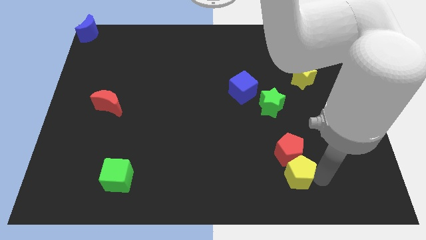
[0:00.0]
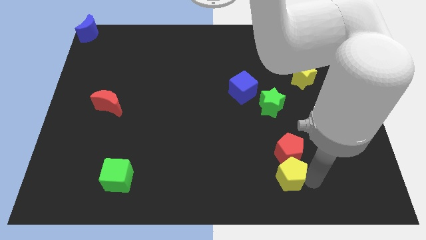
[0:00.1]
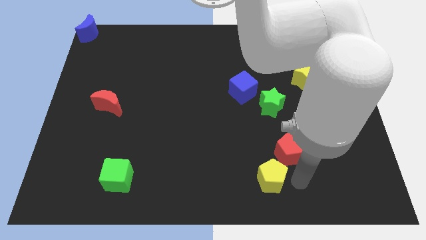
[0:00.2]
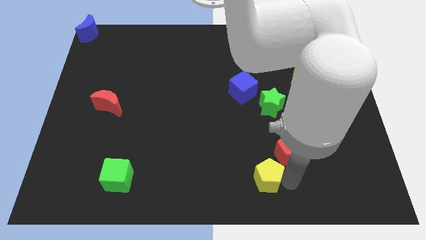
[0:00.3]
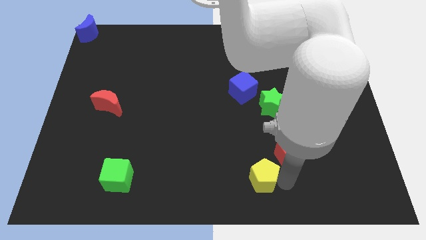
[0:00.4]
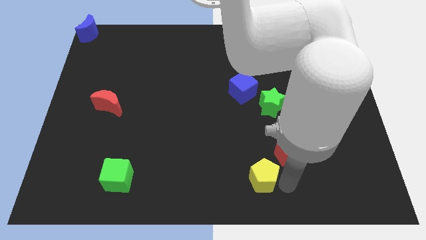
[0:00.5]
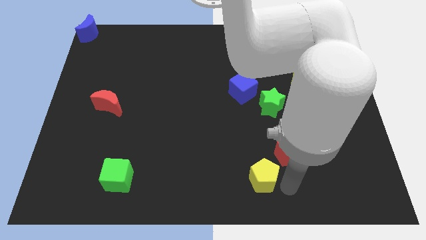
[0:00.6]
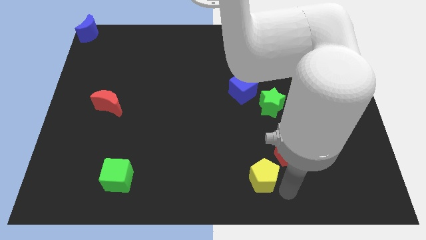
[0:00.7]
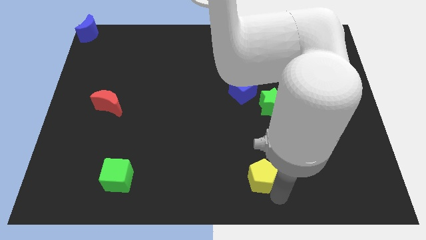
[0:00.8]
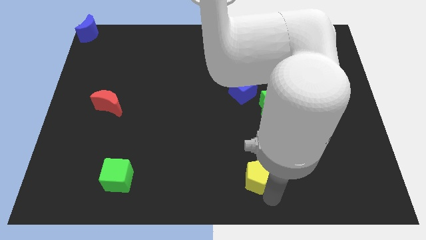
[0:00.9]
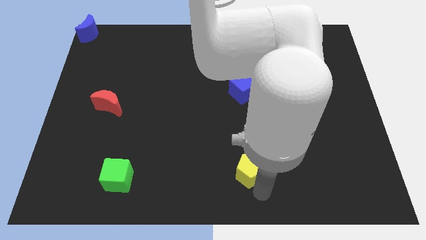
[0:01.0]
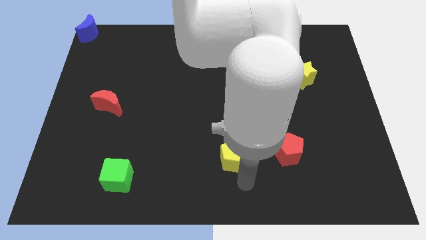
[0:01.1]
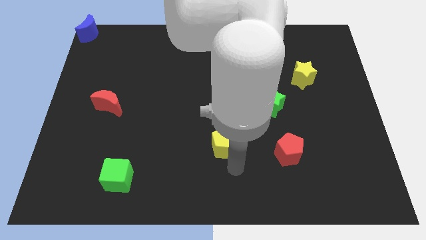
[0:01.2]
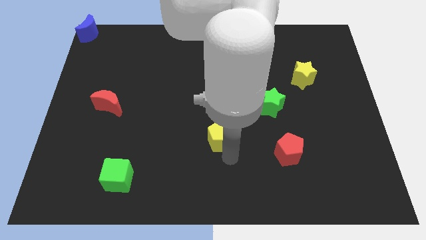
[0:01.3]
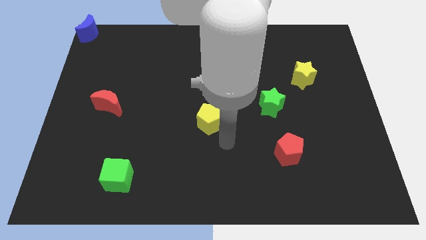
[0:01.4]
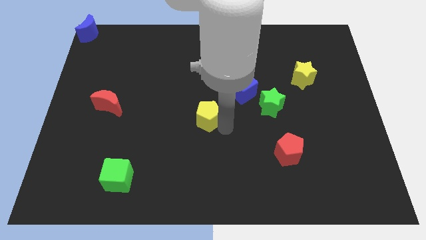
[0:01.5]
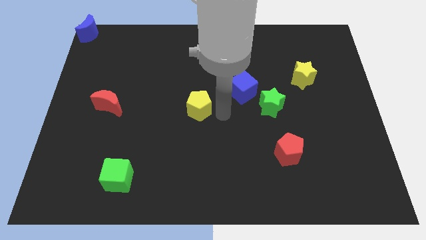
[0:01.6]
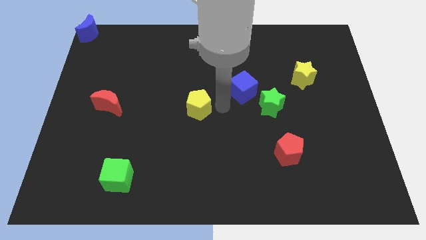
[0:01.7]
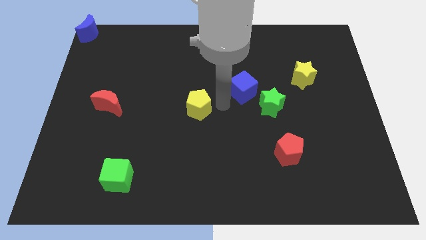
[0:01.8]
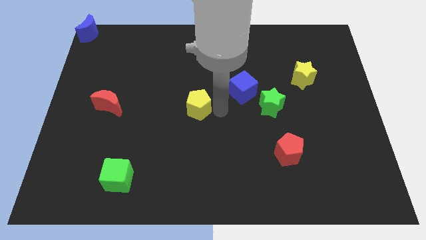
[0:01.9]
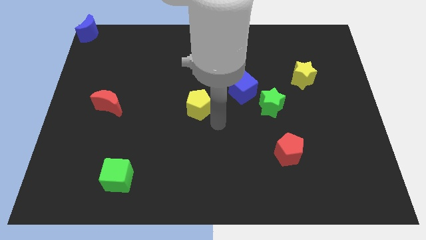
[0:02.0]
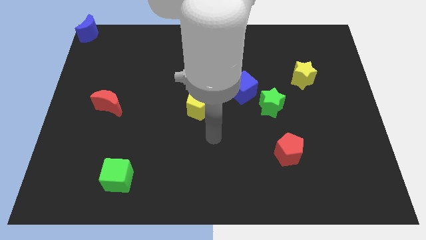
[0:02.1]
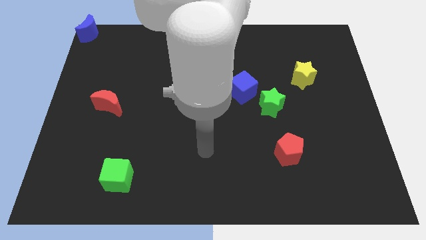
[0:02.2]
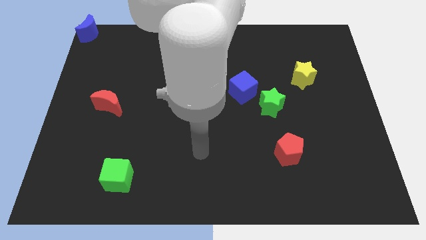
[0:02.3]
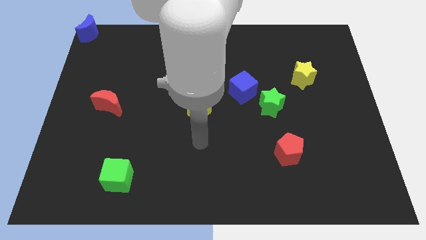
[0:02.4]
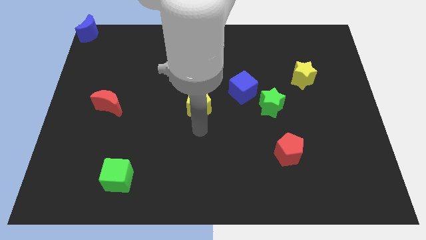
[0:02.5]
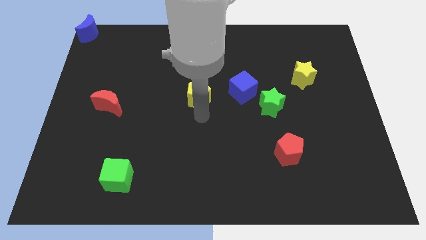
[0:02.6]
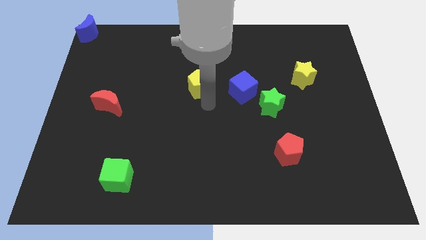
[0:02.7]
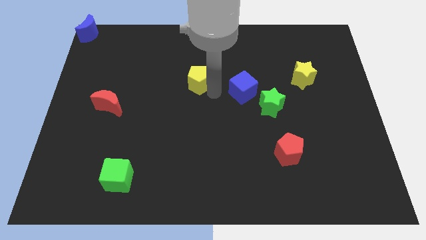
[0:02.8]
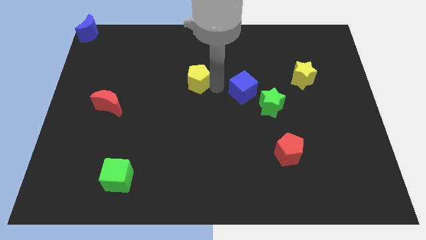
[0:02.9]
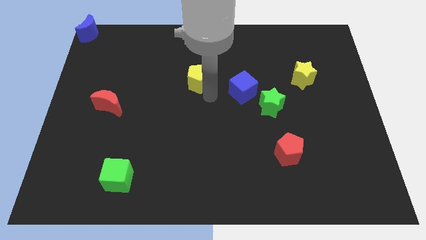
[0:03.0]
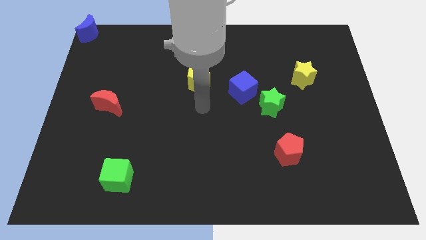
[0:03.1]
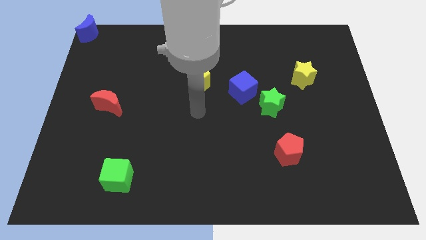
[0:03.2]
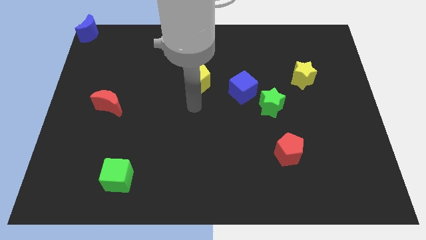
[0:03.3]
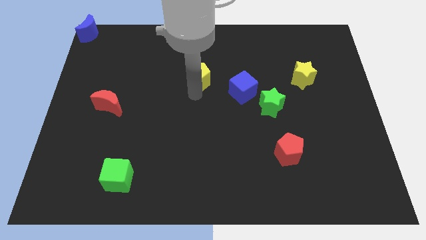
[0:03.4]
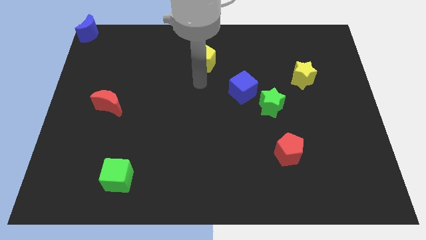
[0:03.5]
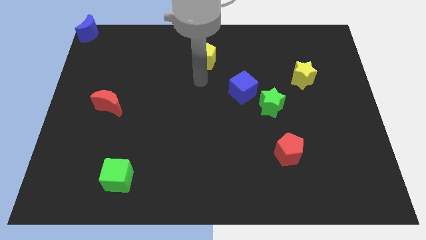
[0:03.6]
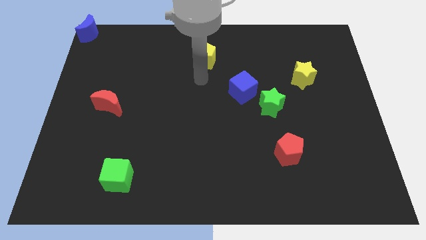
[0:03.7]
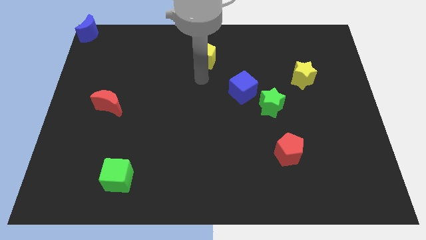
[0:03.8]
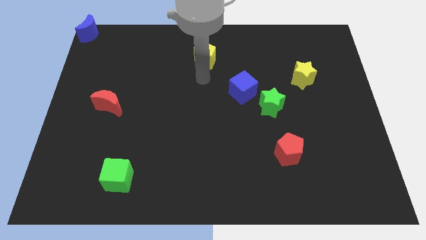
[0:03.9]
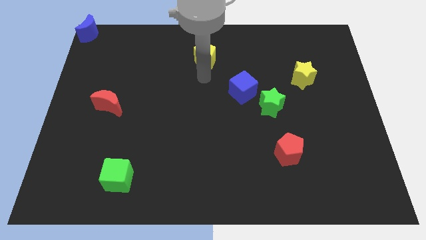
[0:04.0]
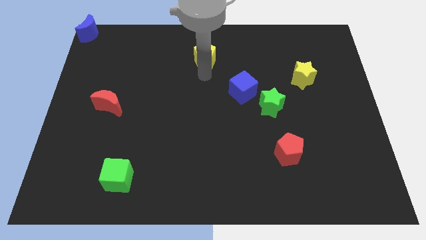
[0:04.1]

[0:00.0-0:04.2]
separate yellow pentagon from red pentagon

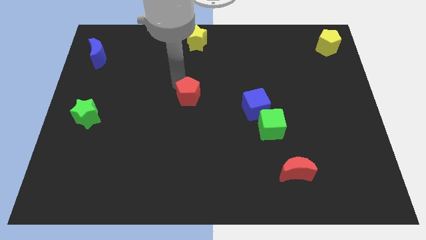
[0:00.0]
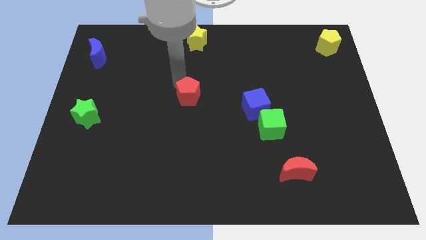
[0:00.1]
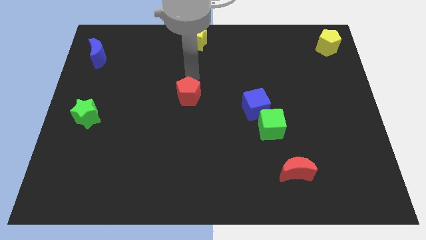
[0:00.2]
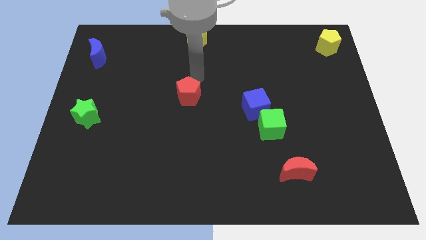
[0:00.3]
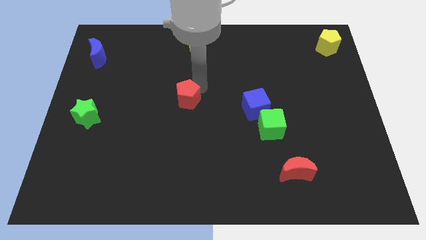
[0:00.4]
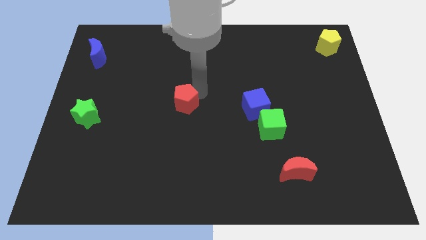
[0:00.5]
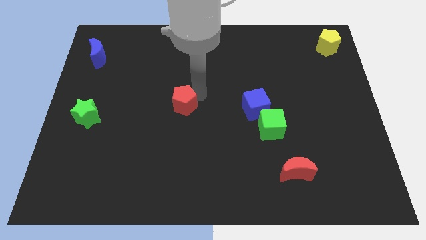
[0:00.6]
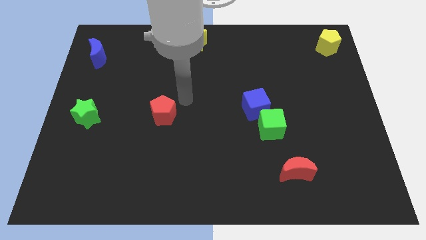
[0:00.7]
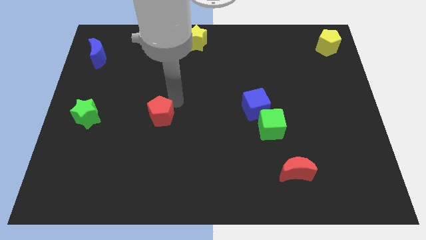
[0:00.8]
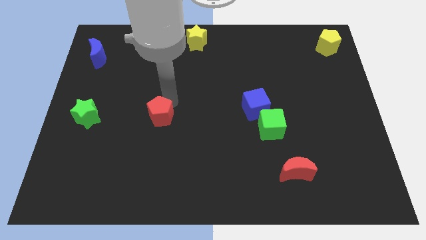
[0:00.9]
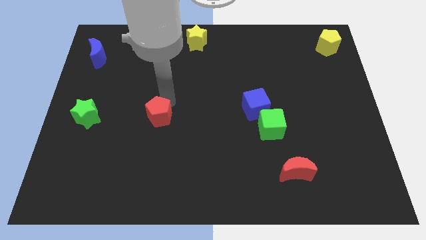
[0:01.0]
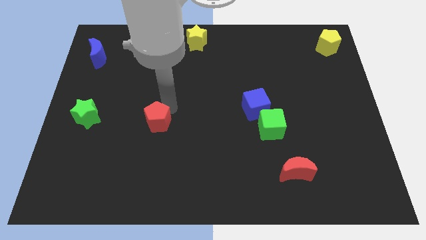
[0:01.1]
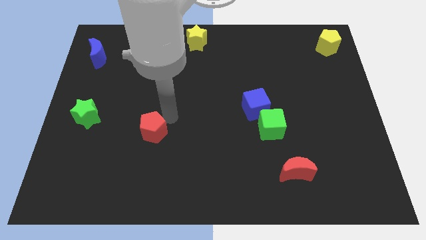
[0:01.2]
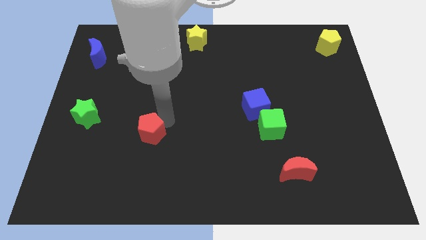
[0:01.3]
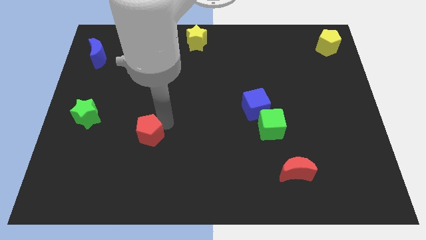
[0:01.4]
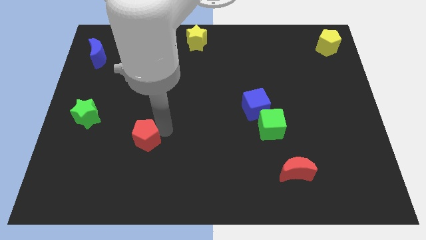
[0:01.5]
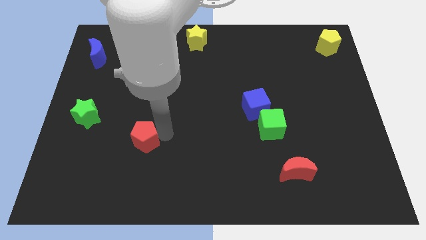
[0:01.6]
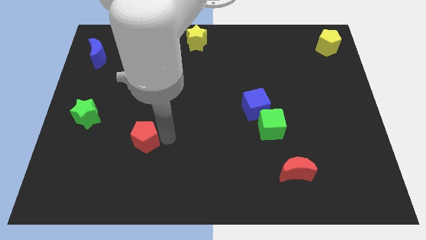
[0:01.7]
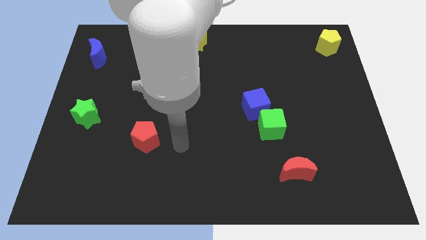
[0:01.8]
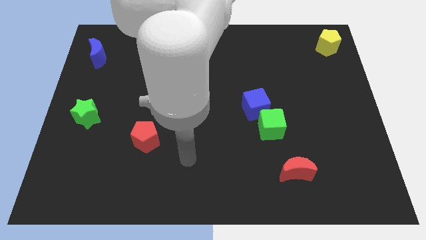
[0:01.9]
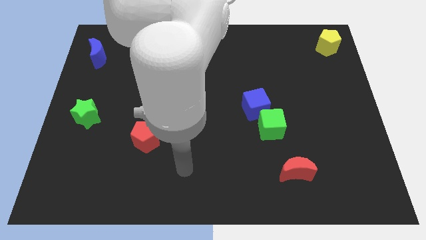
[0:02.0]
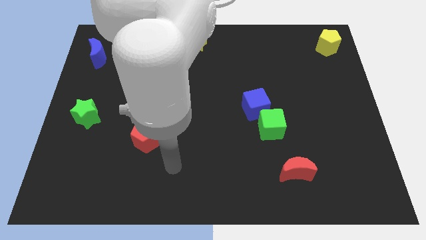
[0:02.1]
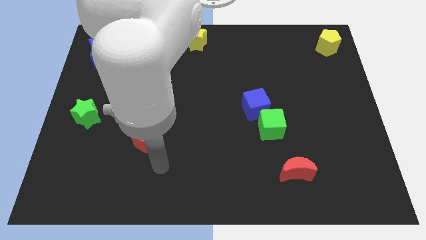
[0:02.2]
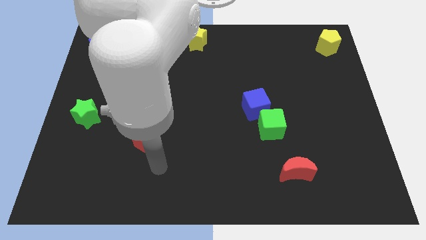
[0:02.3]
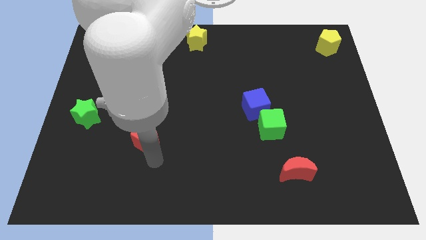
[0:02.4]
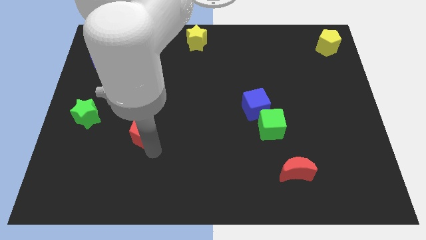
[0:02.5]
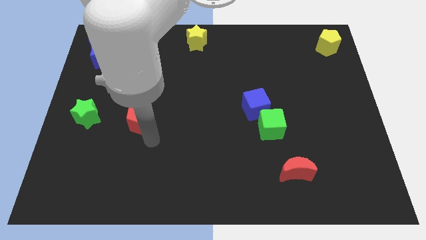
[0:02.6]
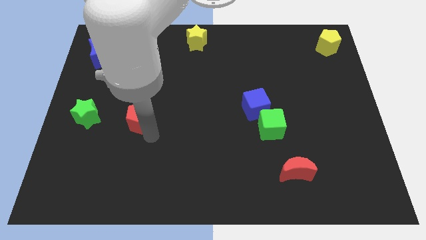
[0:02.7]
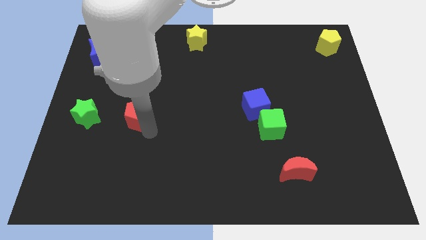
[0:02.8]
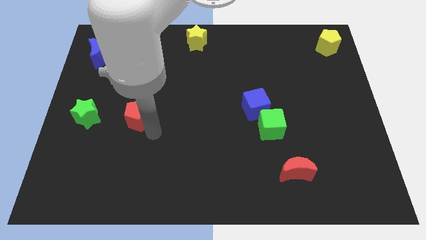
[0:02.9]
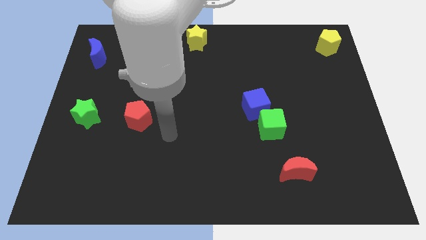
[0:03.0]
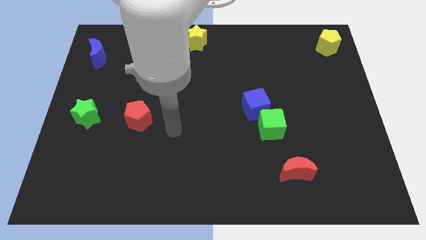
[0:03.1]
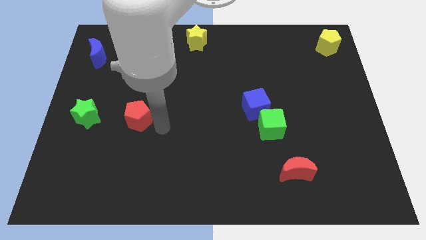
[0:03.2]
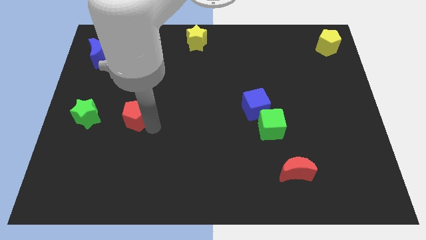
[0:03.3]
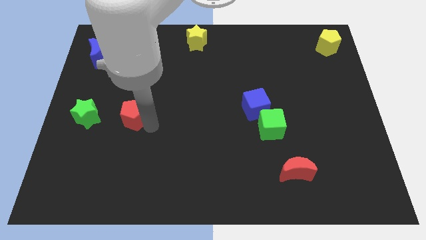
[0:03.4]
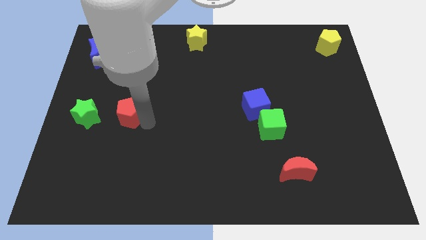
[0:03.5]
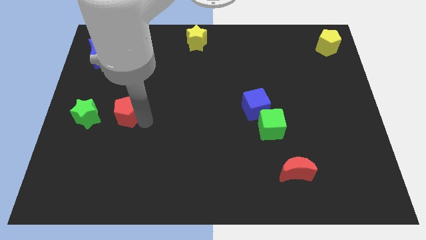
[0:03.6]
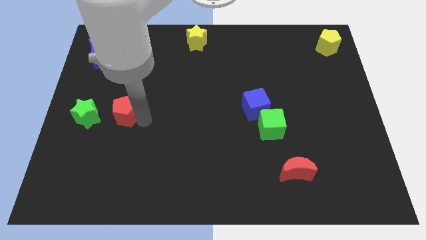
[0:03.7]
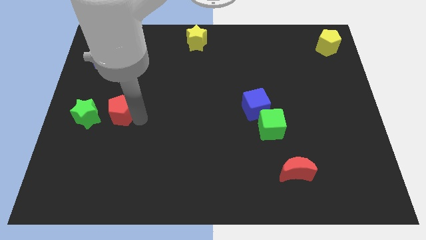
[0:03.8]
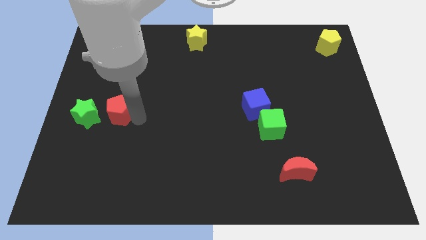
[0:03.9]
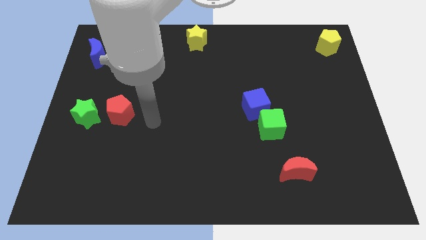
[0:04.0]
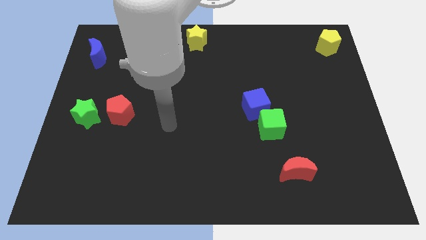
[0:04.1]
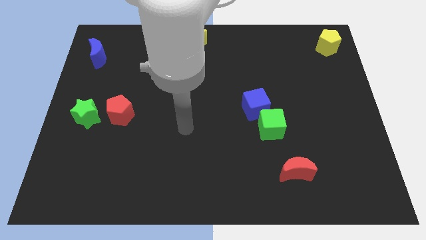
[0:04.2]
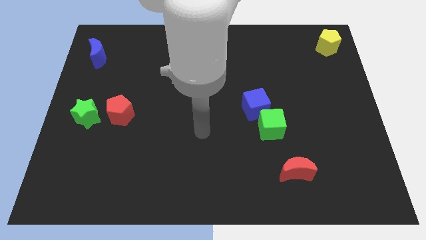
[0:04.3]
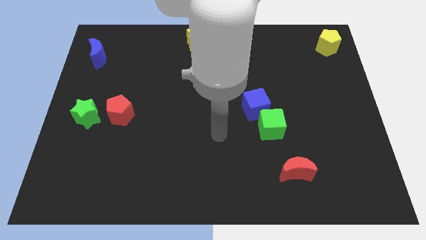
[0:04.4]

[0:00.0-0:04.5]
place the red pentagon parallel right to the green star
